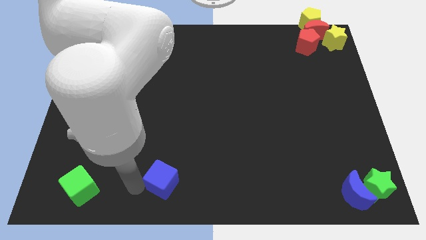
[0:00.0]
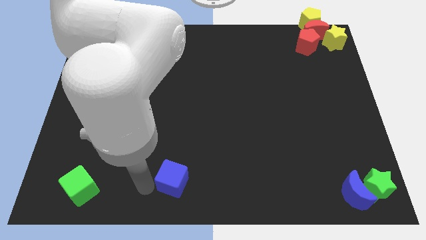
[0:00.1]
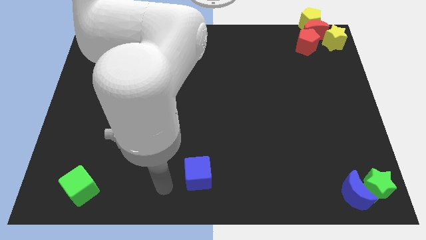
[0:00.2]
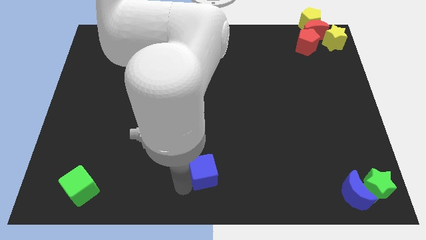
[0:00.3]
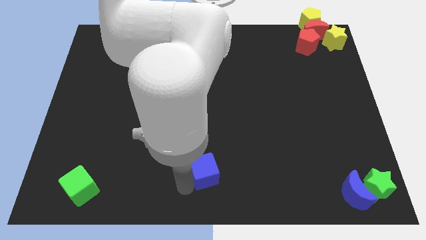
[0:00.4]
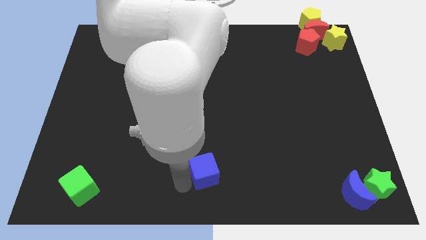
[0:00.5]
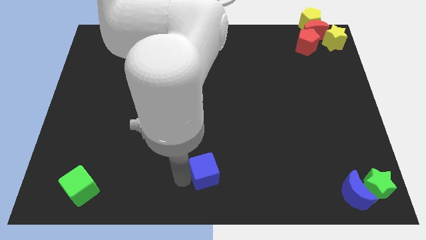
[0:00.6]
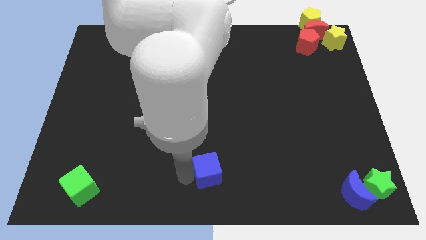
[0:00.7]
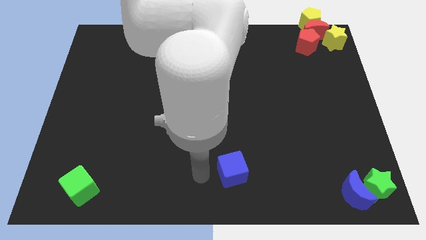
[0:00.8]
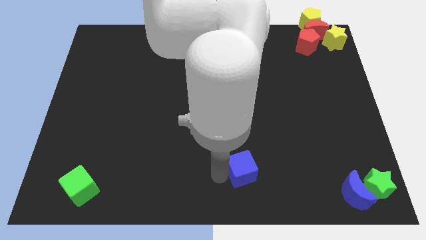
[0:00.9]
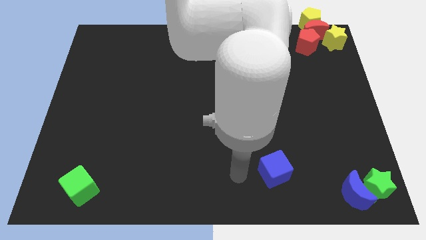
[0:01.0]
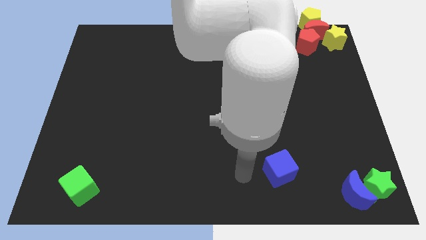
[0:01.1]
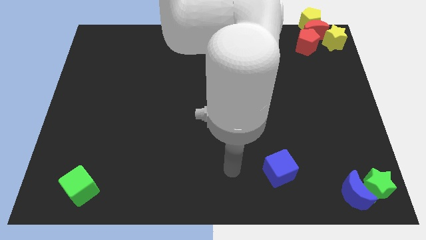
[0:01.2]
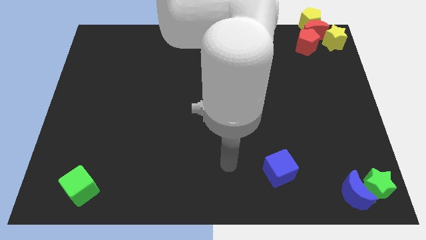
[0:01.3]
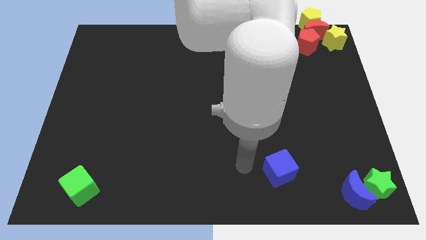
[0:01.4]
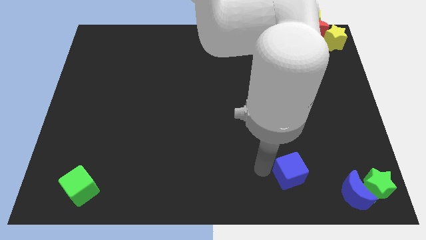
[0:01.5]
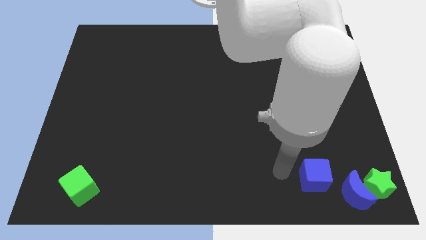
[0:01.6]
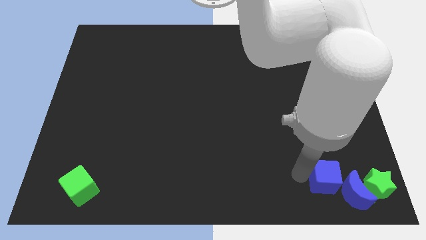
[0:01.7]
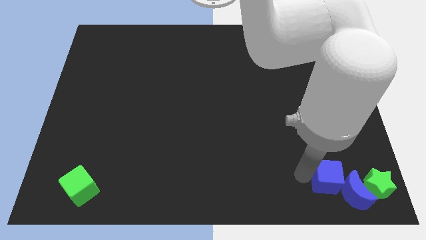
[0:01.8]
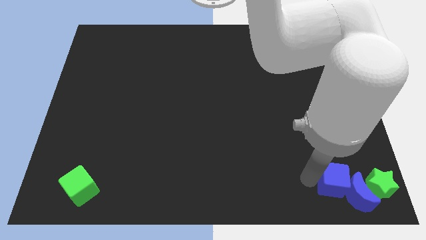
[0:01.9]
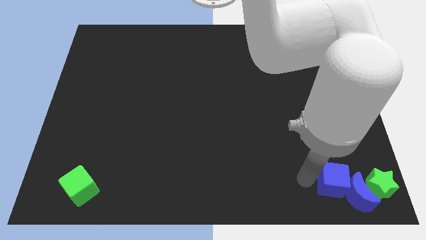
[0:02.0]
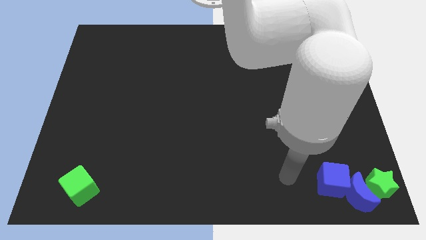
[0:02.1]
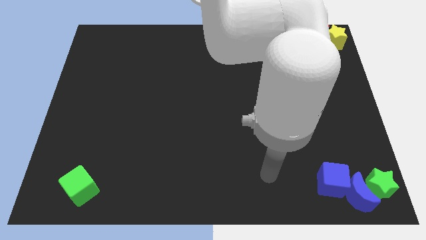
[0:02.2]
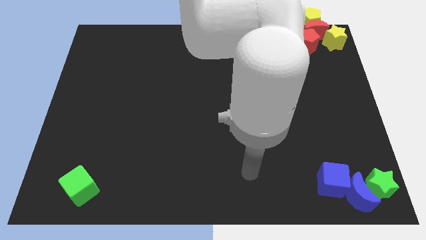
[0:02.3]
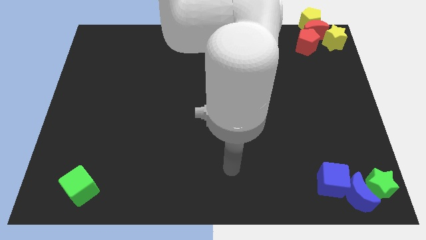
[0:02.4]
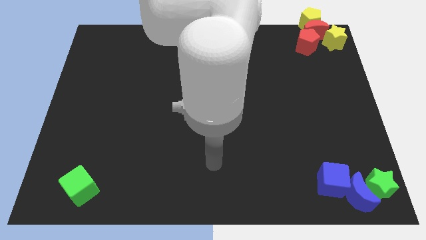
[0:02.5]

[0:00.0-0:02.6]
push the blue cube to left side of the blue moon

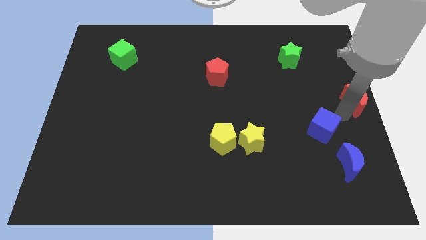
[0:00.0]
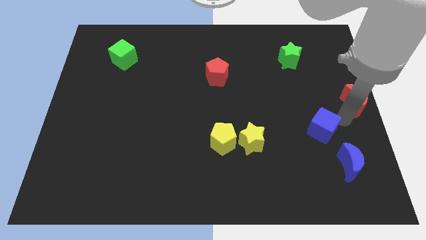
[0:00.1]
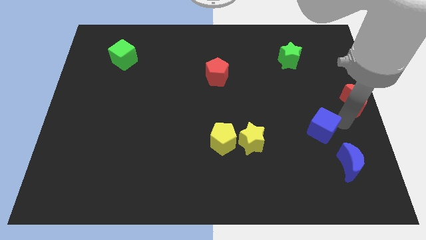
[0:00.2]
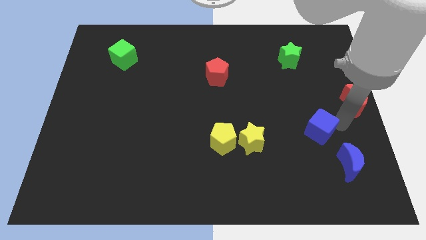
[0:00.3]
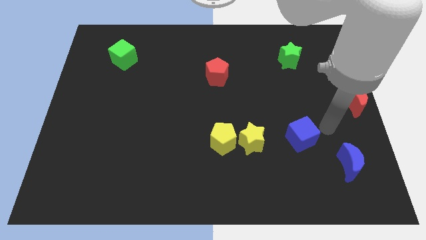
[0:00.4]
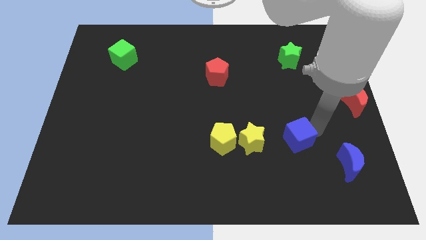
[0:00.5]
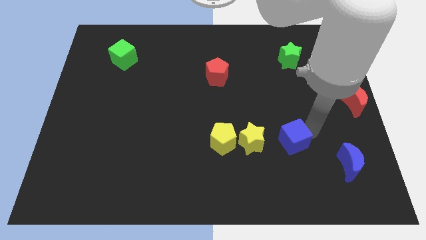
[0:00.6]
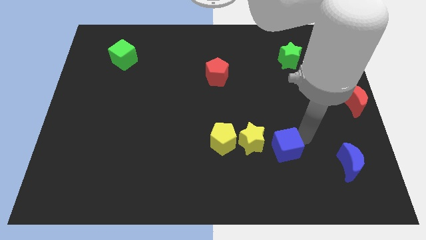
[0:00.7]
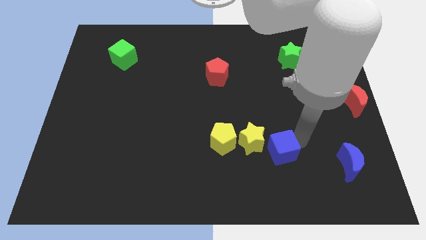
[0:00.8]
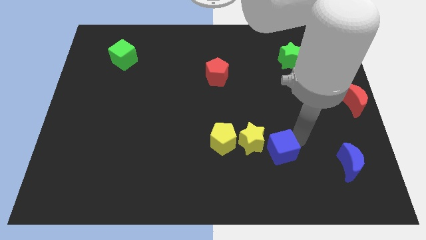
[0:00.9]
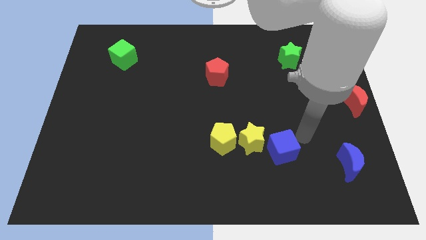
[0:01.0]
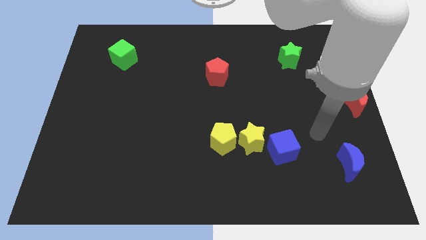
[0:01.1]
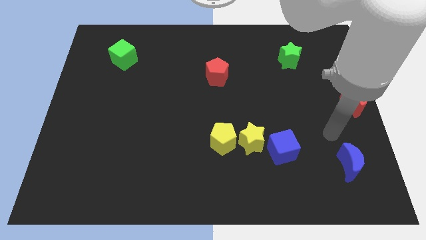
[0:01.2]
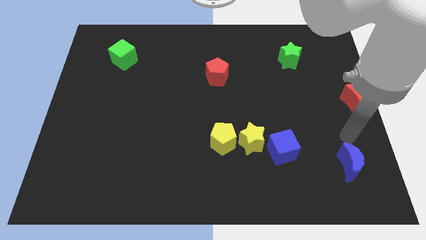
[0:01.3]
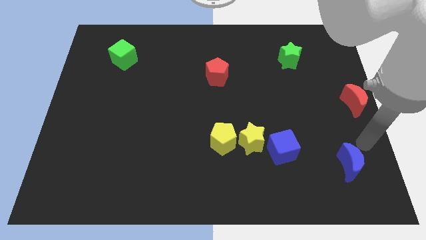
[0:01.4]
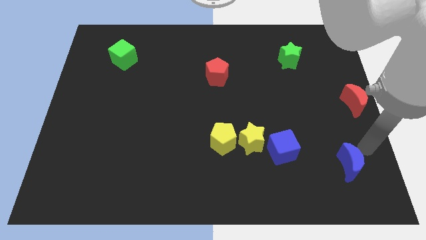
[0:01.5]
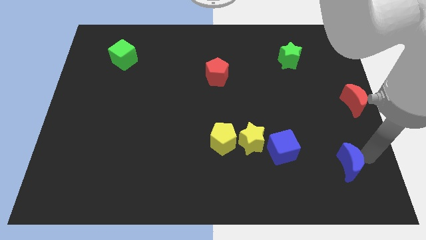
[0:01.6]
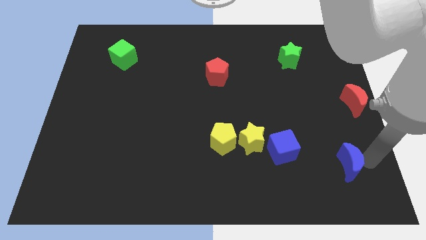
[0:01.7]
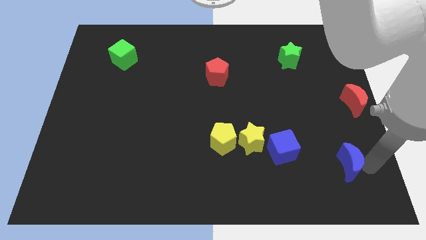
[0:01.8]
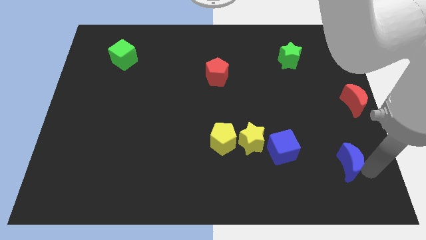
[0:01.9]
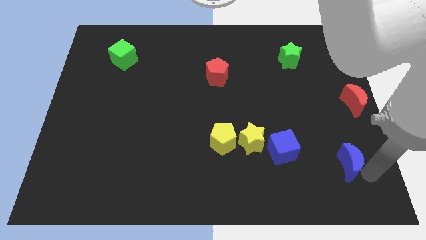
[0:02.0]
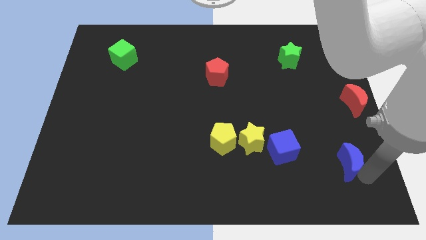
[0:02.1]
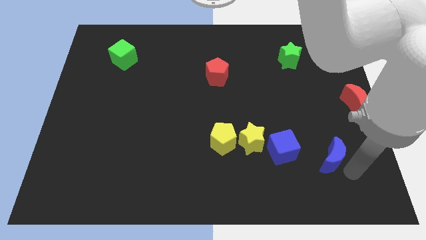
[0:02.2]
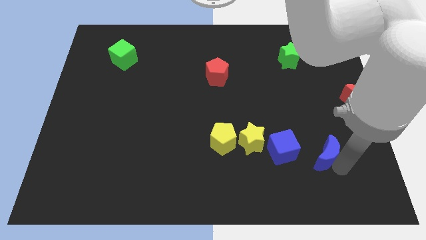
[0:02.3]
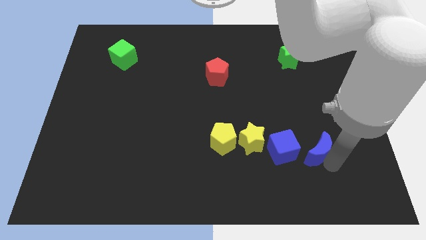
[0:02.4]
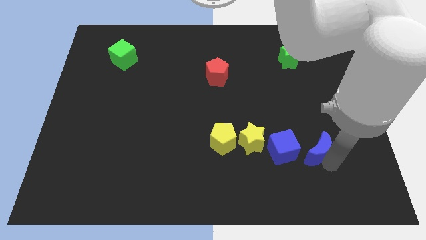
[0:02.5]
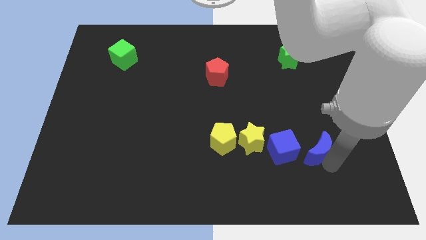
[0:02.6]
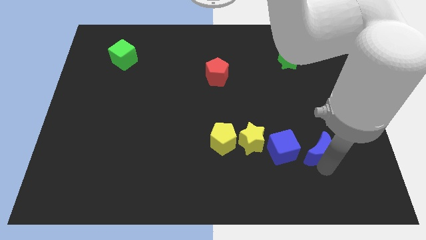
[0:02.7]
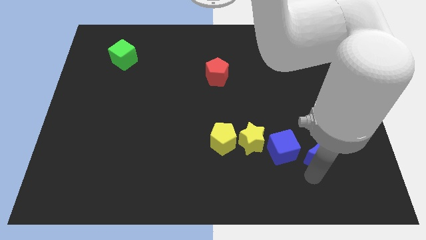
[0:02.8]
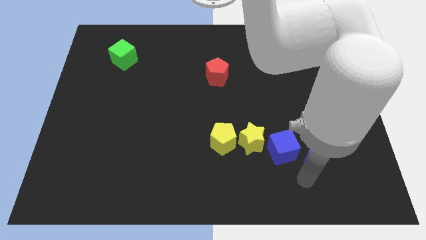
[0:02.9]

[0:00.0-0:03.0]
slide the blue cube and blue moon towards the yellow star

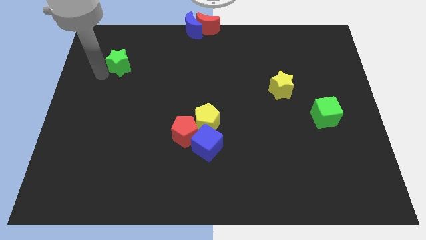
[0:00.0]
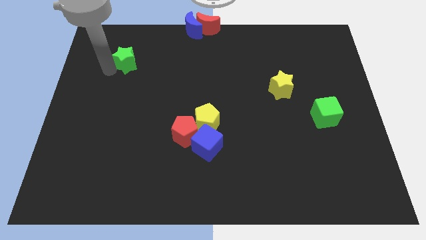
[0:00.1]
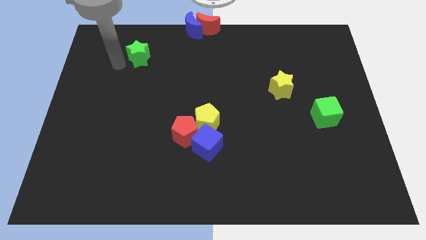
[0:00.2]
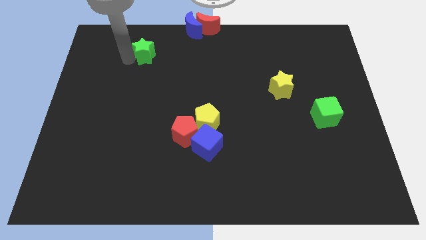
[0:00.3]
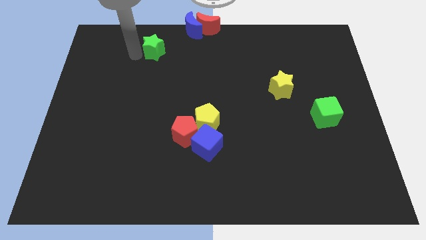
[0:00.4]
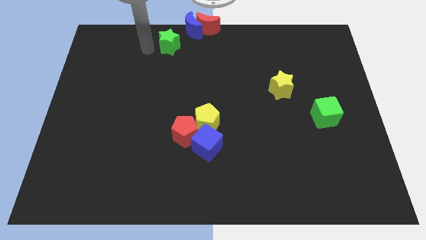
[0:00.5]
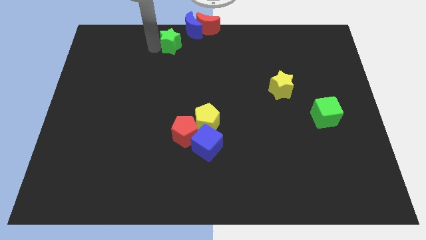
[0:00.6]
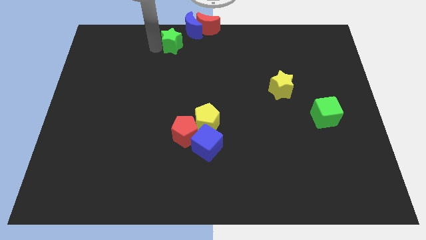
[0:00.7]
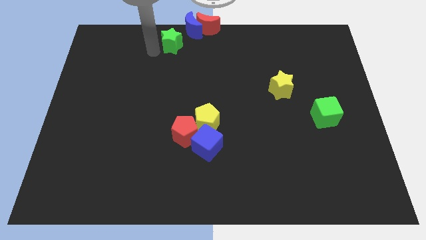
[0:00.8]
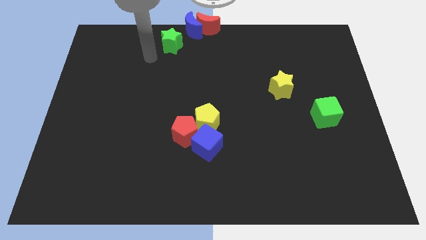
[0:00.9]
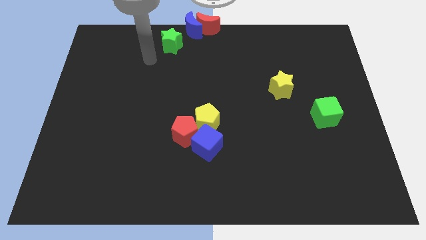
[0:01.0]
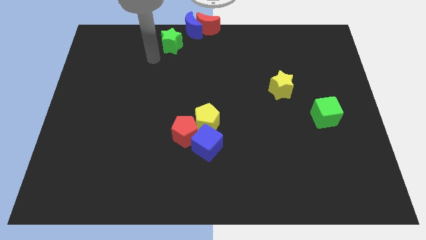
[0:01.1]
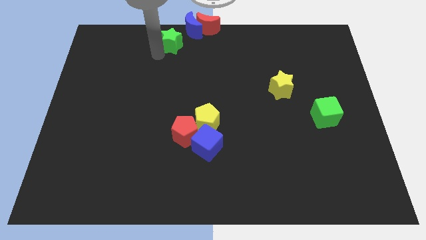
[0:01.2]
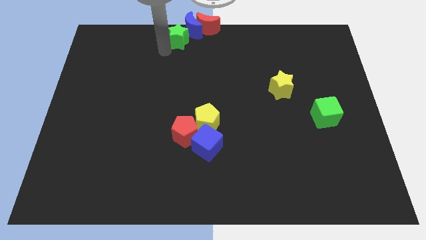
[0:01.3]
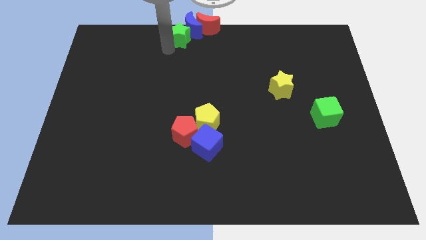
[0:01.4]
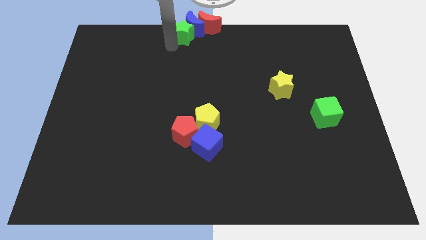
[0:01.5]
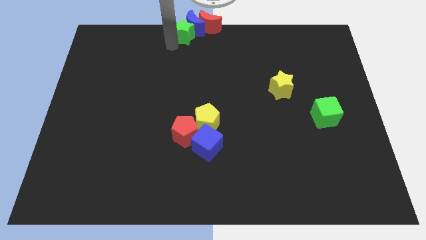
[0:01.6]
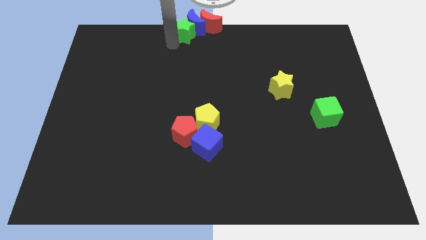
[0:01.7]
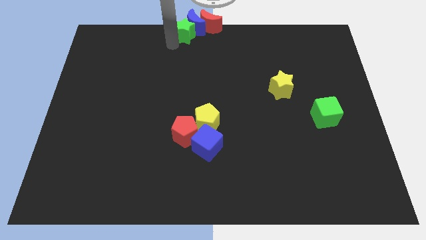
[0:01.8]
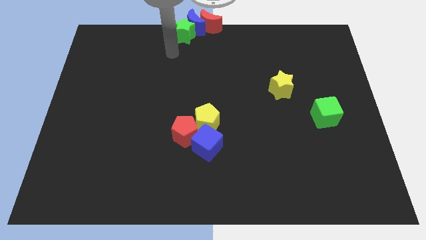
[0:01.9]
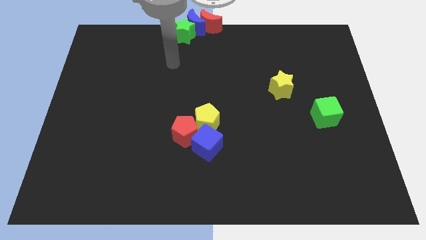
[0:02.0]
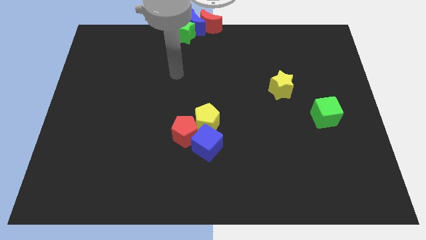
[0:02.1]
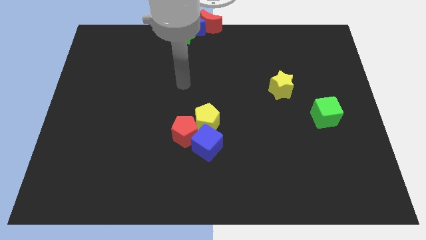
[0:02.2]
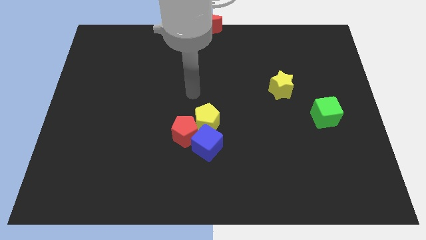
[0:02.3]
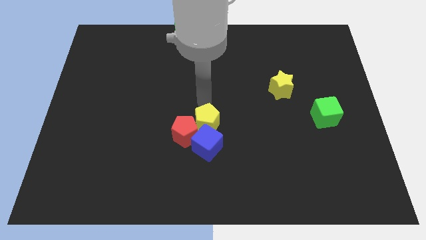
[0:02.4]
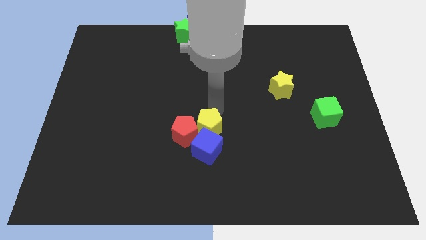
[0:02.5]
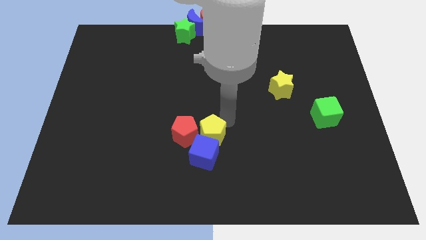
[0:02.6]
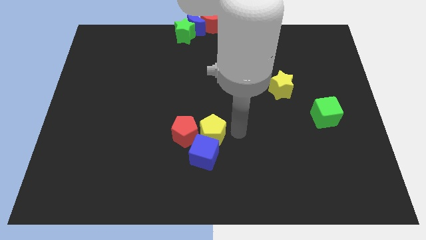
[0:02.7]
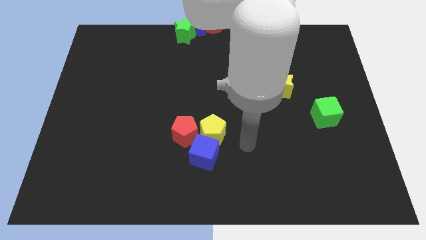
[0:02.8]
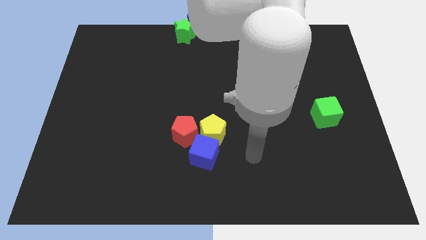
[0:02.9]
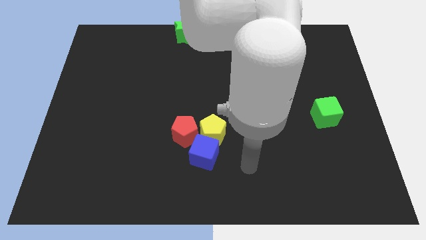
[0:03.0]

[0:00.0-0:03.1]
push green star below the blue crescent

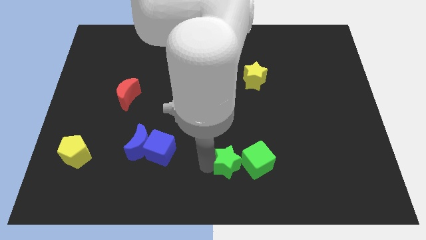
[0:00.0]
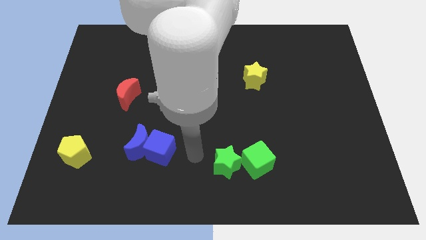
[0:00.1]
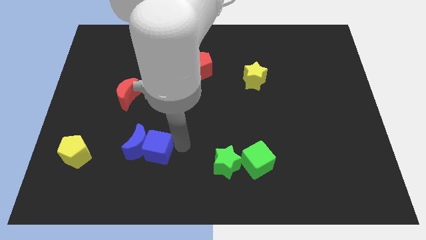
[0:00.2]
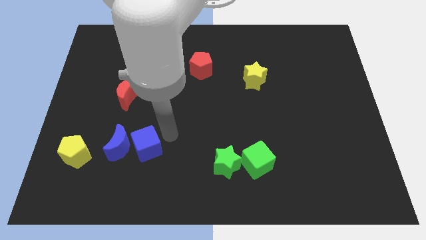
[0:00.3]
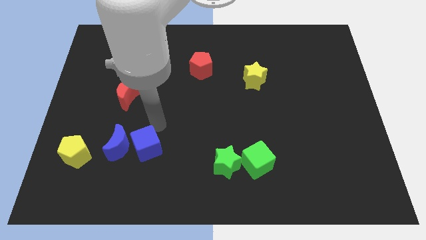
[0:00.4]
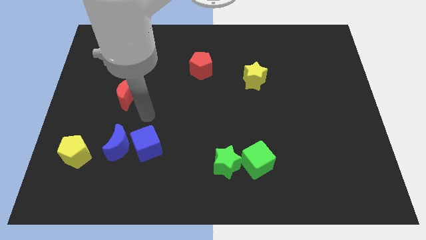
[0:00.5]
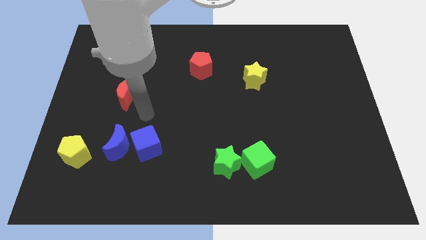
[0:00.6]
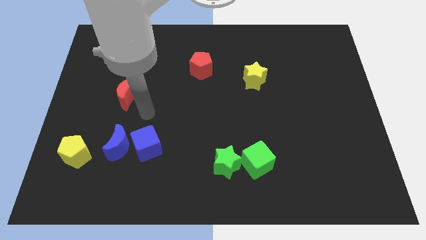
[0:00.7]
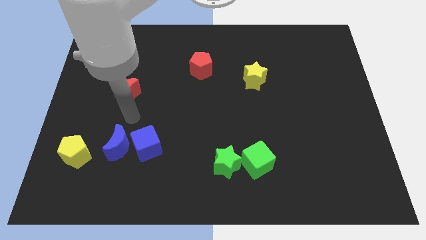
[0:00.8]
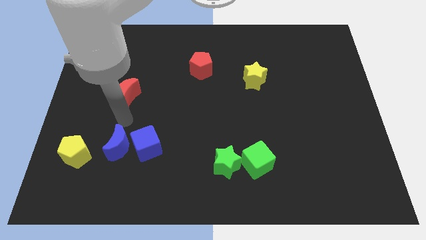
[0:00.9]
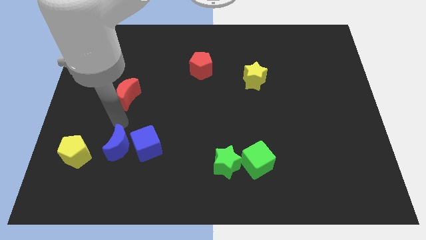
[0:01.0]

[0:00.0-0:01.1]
push the blue blocks slightly to the left
